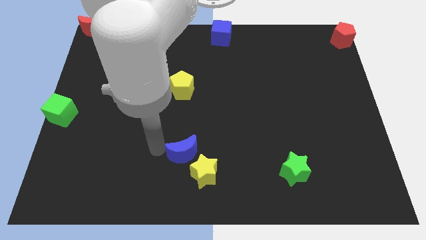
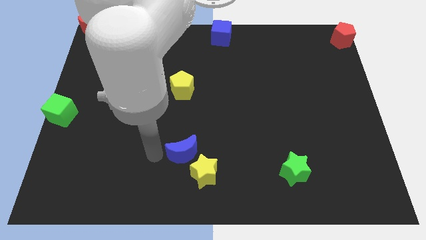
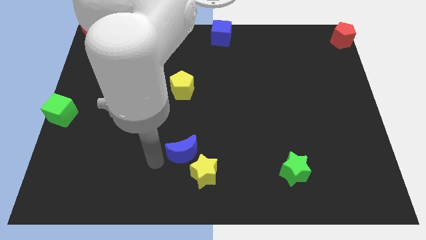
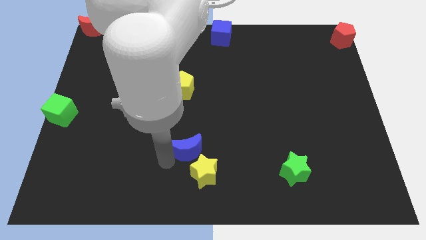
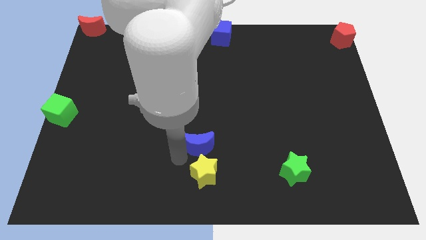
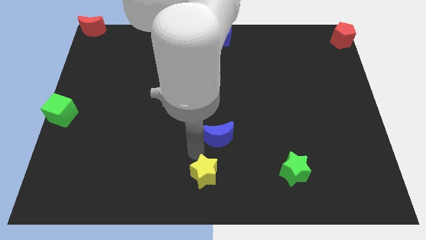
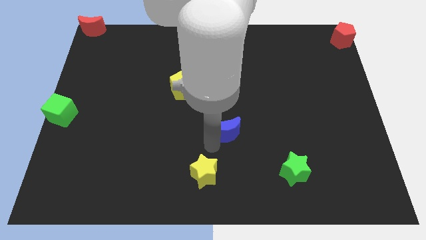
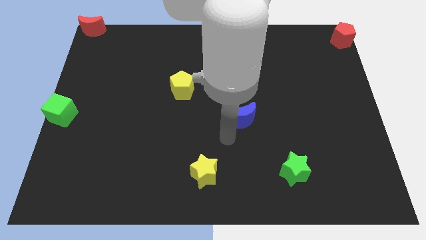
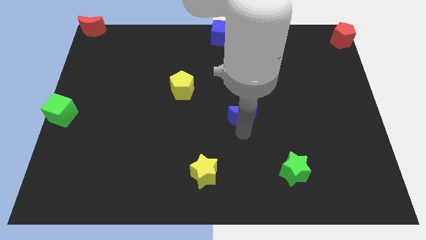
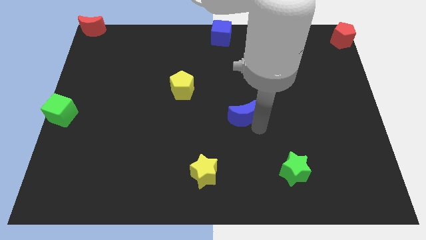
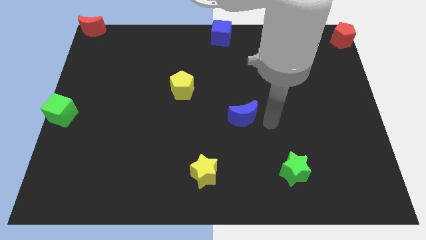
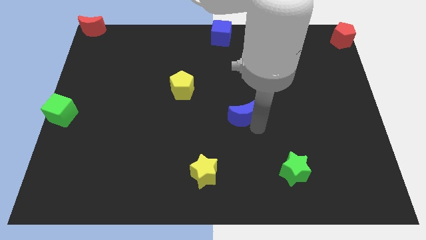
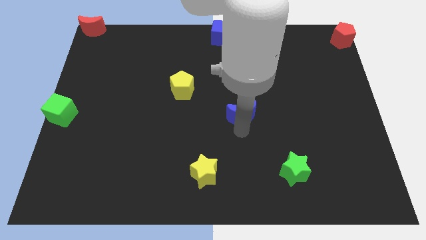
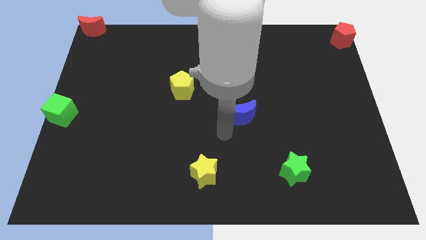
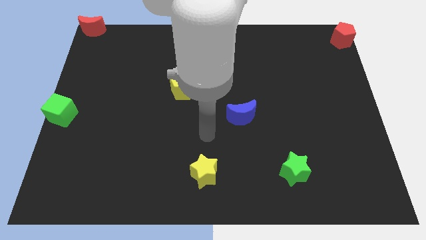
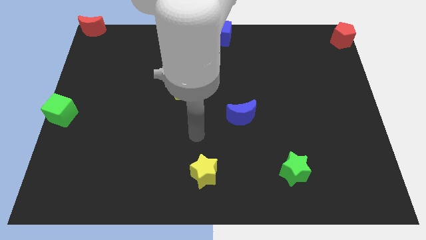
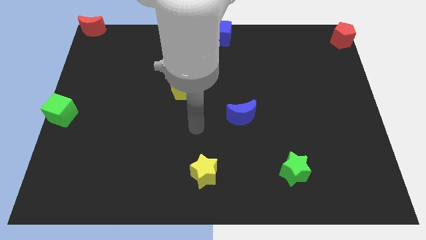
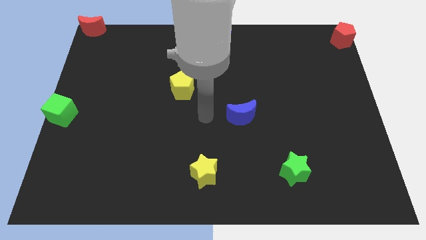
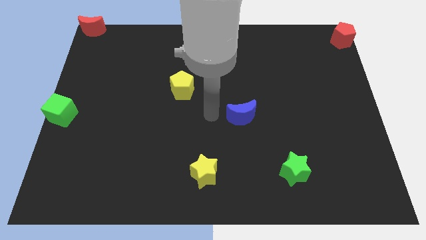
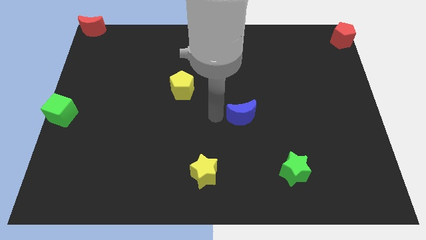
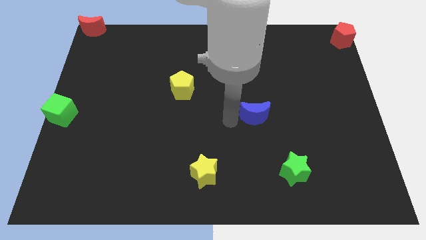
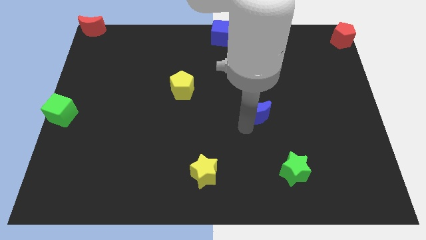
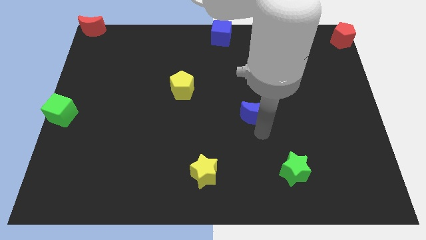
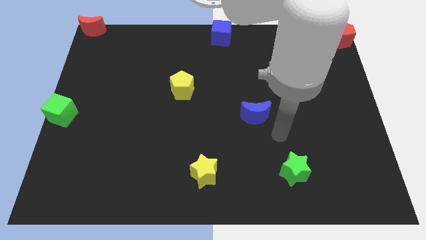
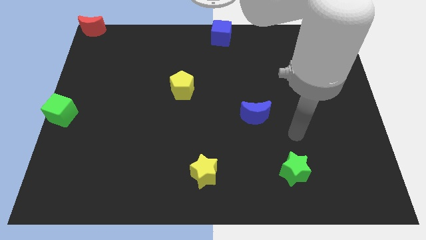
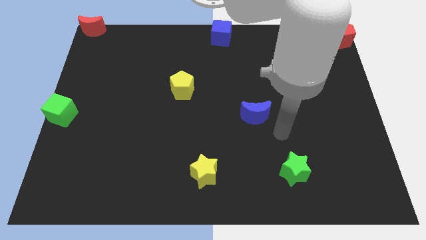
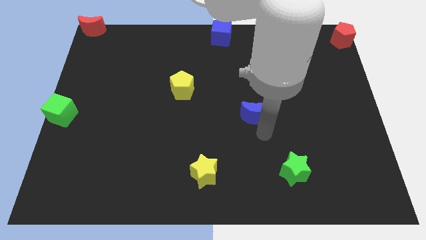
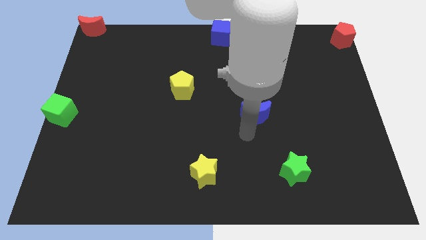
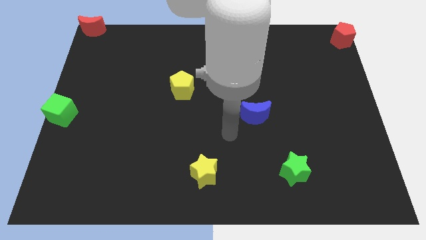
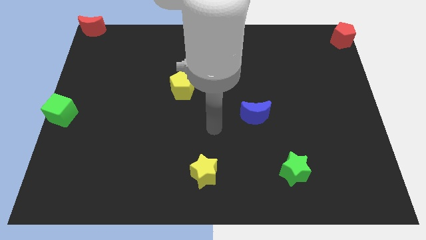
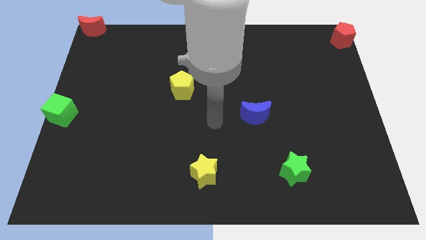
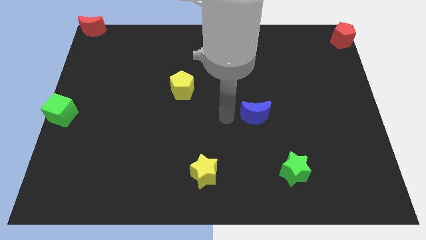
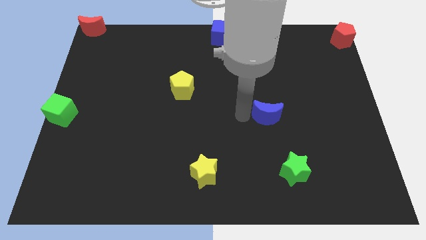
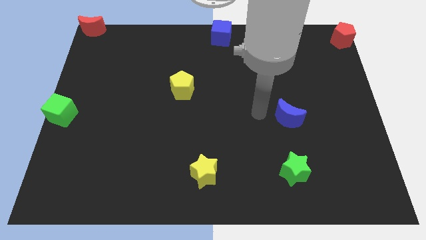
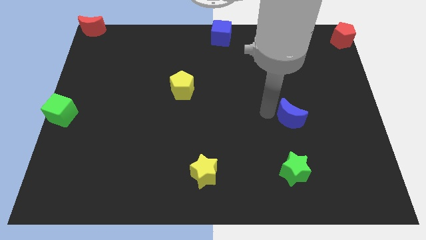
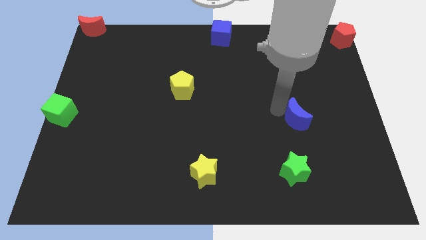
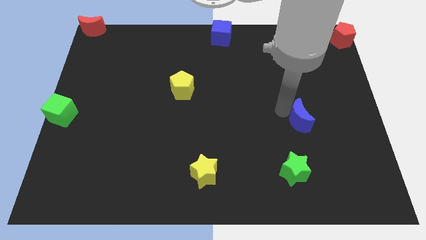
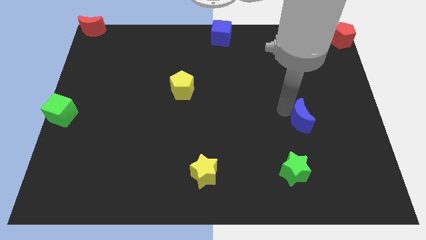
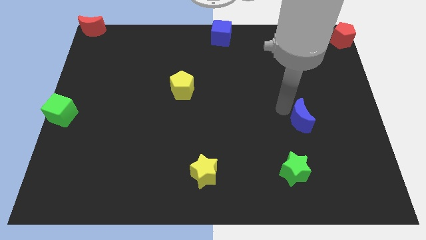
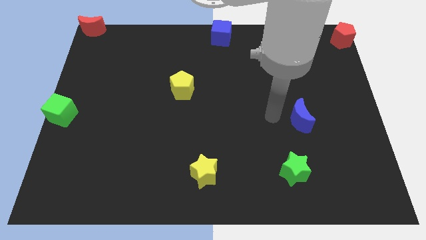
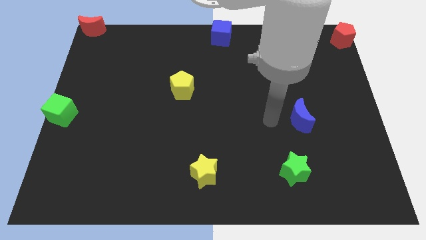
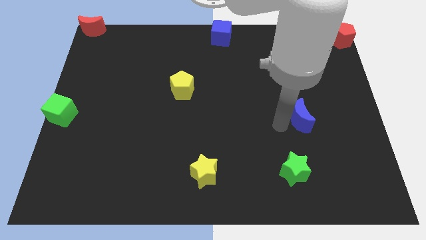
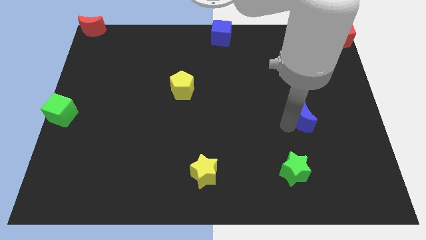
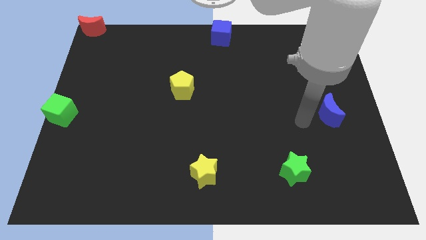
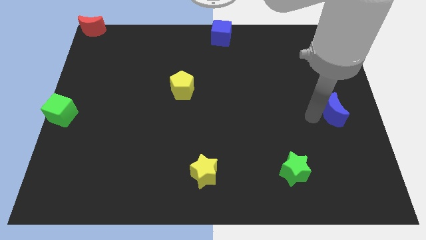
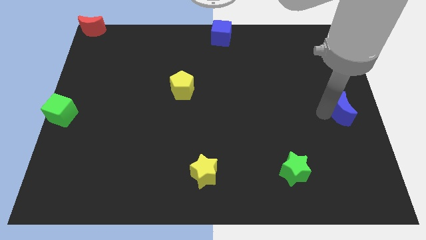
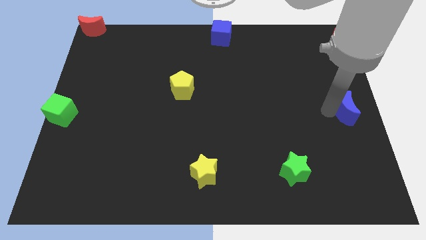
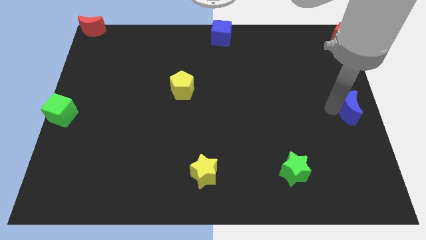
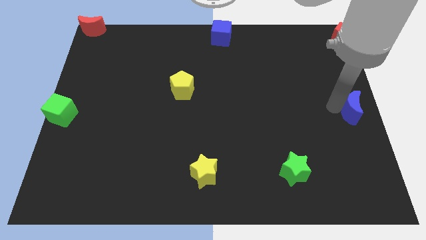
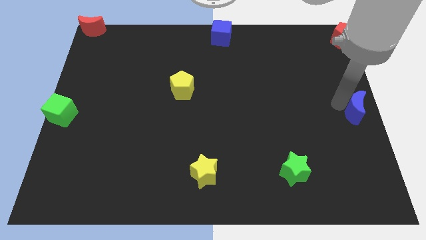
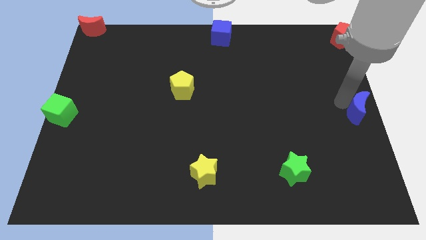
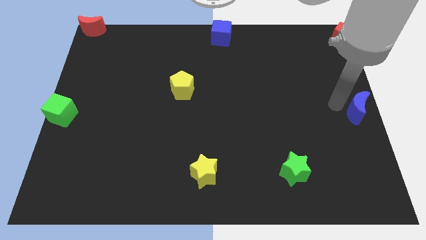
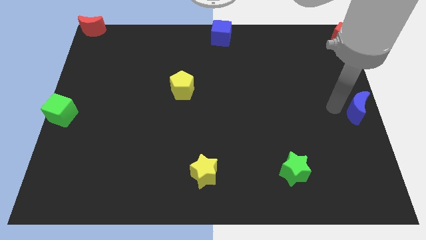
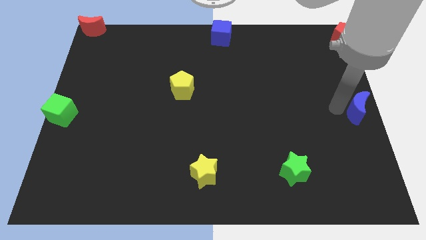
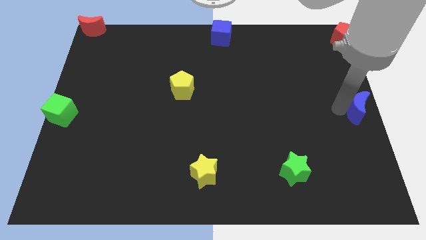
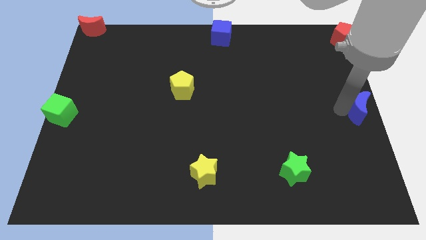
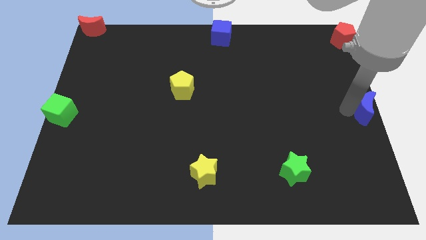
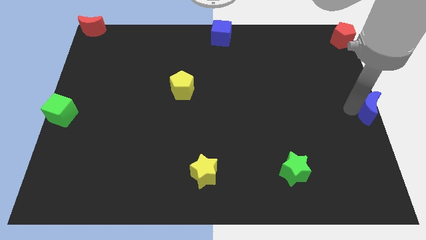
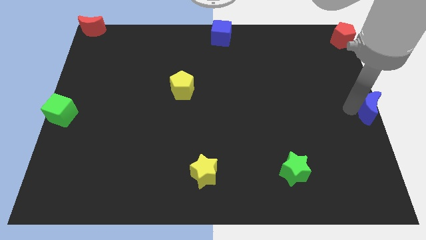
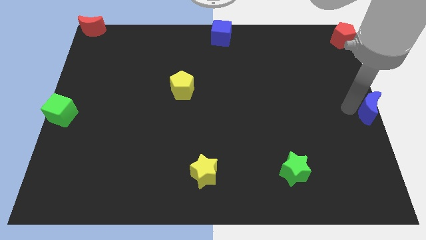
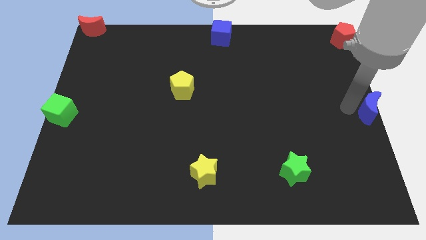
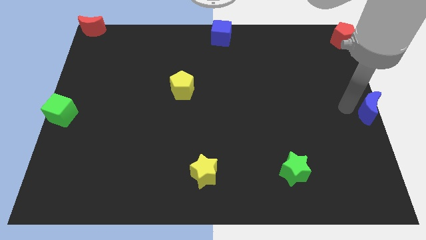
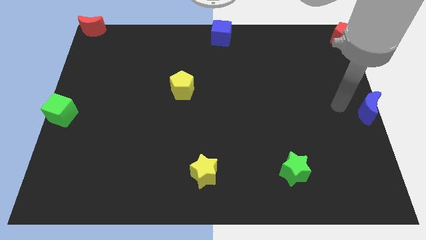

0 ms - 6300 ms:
push the blue moon to the center right

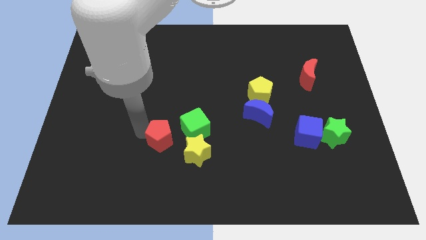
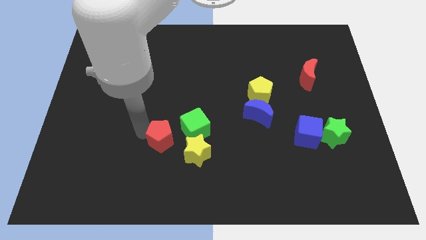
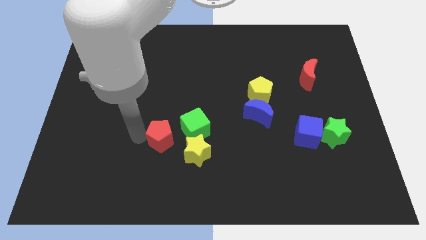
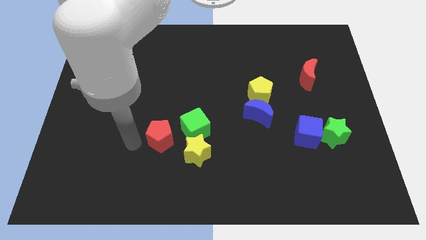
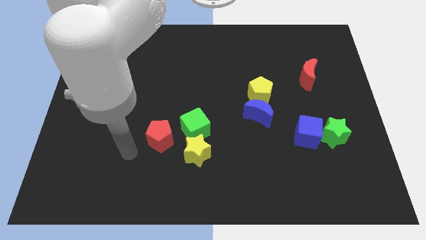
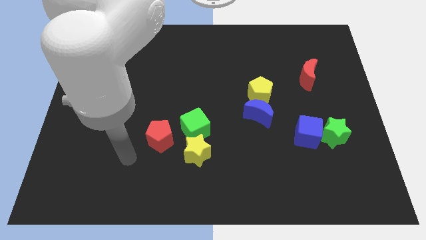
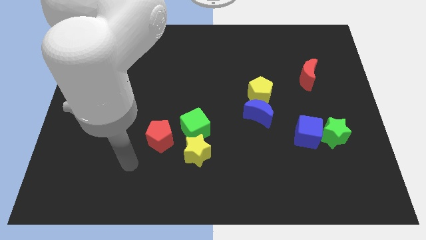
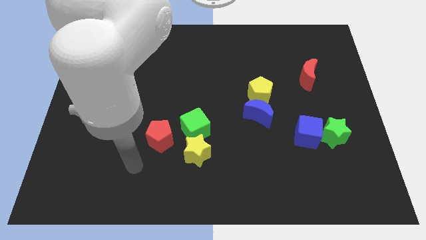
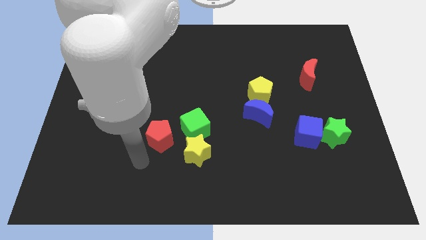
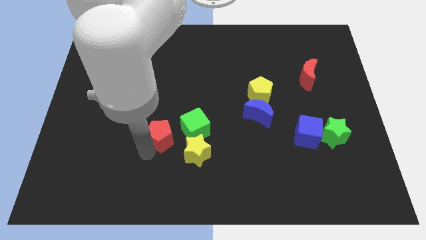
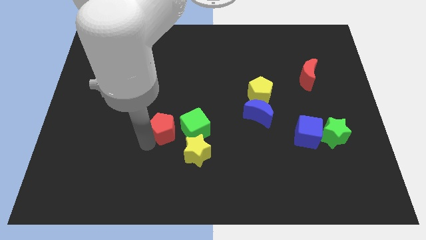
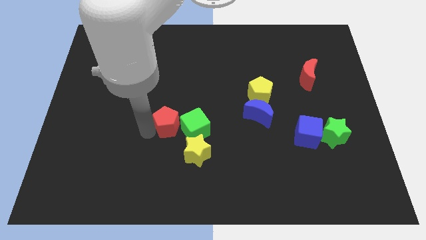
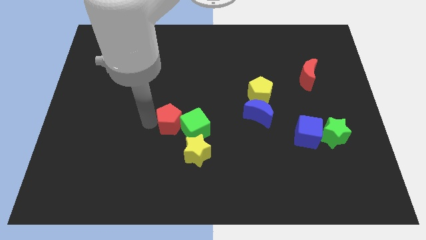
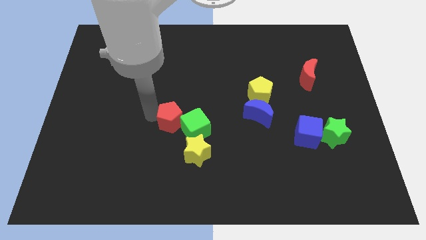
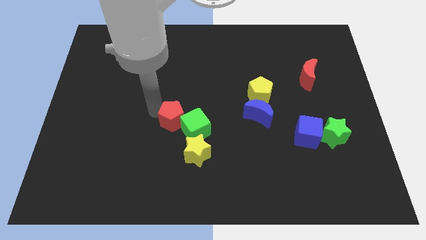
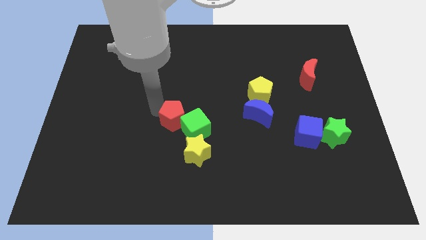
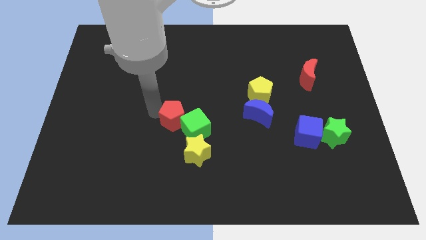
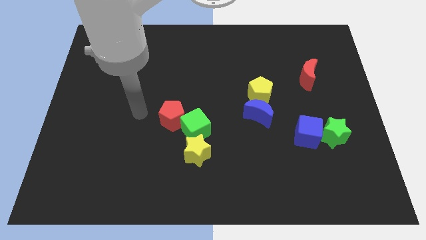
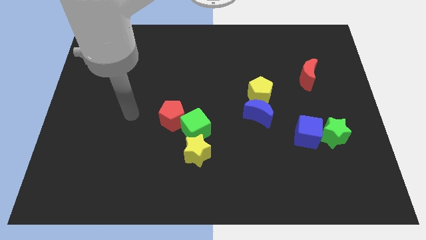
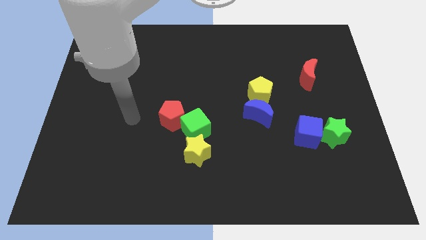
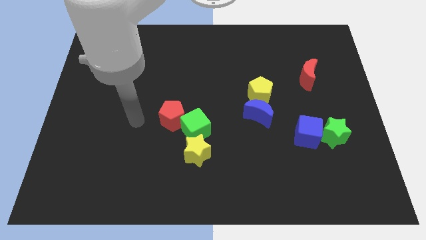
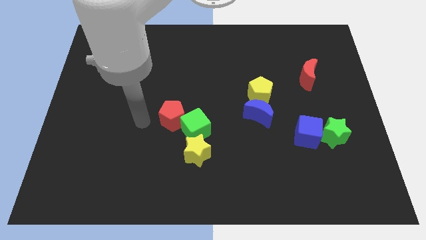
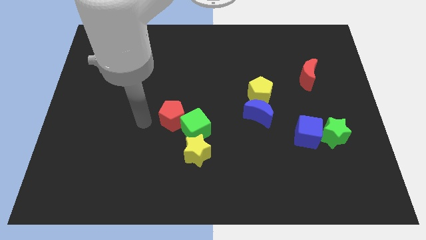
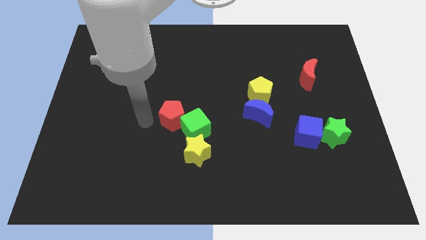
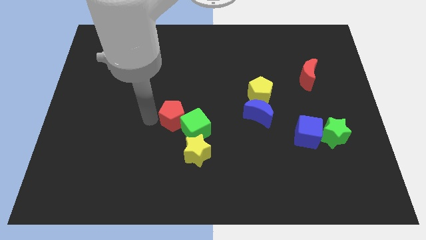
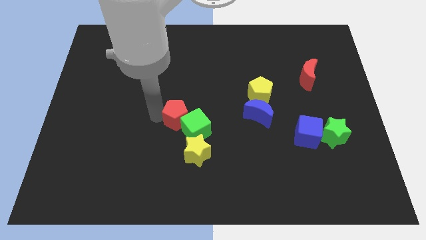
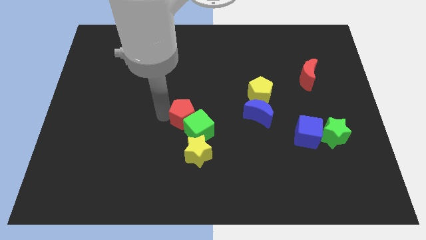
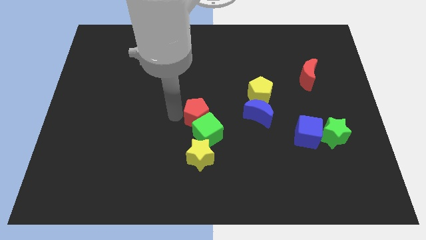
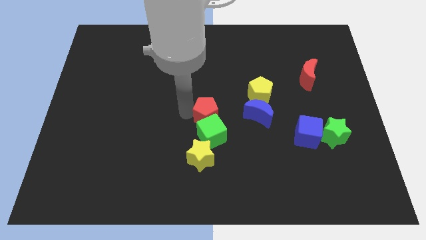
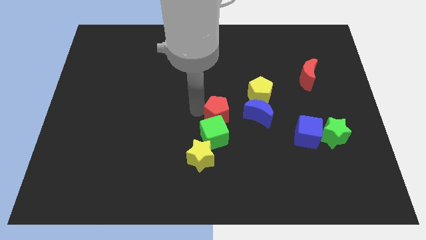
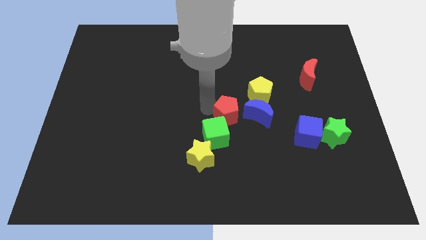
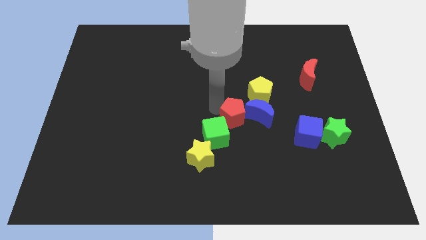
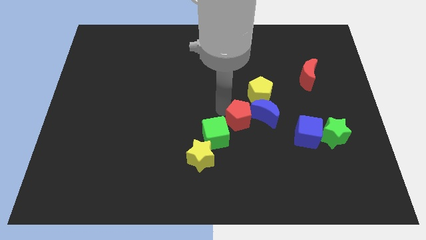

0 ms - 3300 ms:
push the red pentagon into blue crescent
